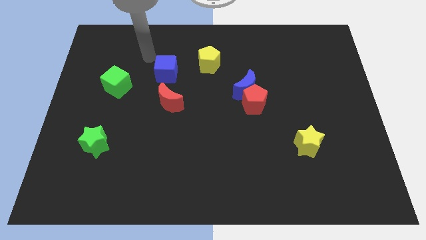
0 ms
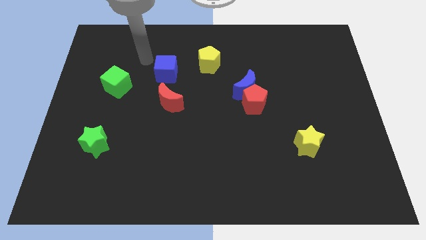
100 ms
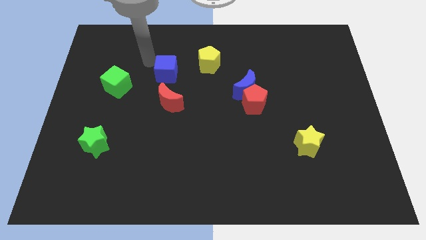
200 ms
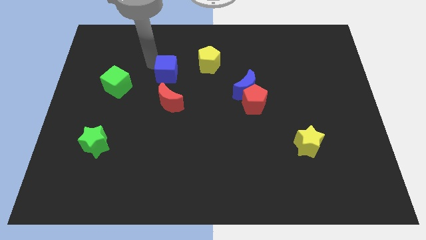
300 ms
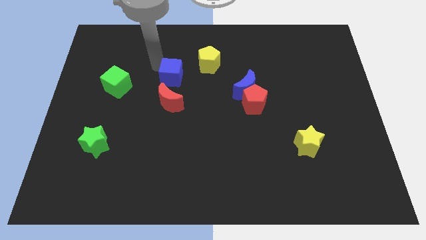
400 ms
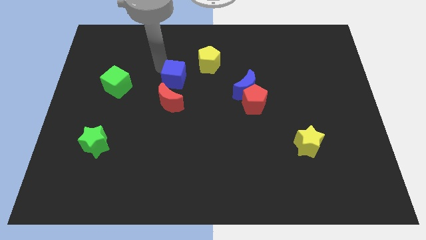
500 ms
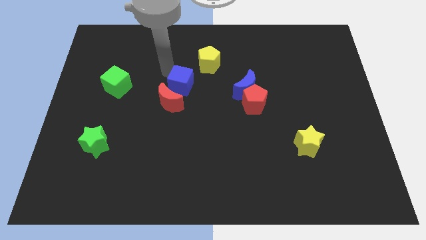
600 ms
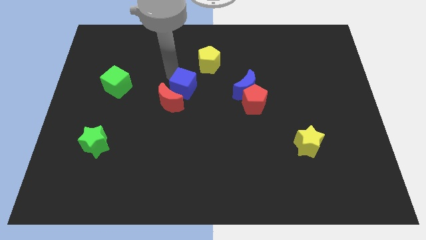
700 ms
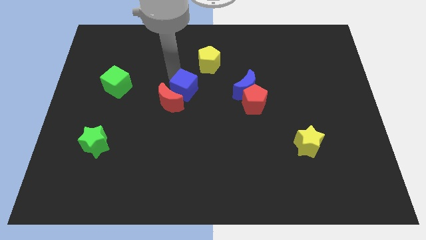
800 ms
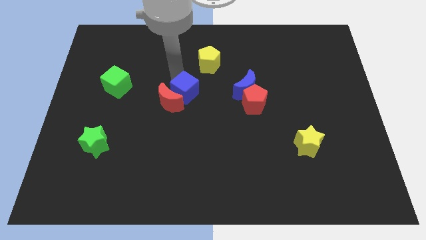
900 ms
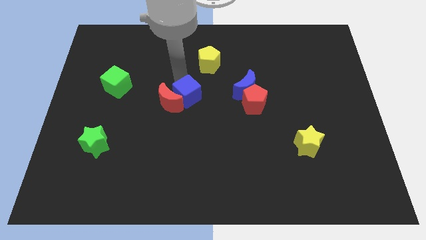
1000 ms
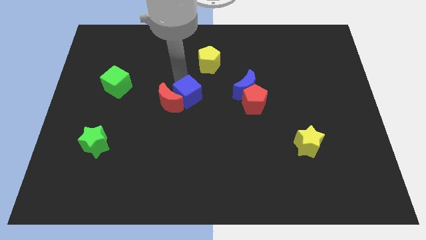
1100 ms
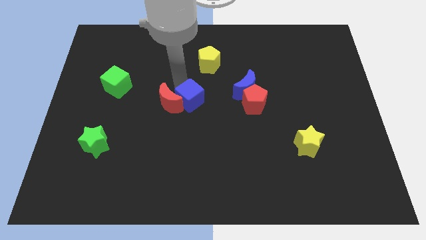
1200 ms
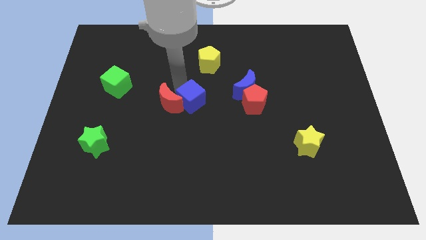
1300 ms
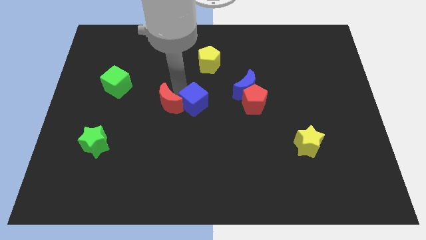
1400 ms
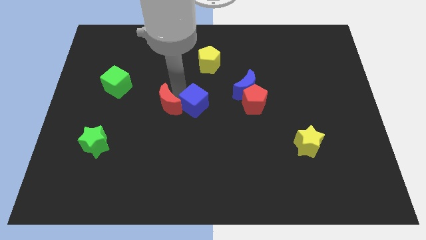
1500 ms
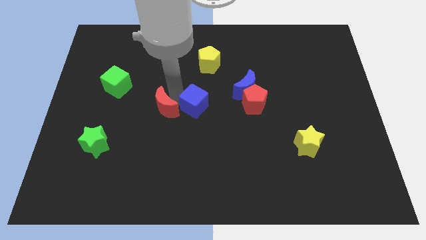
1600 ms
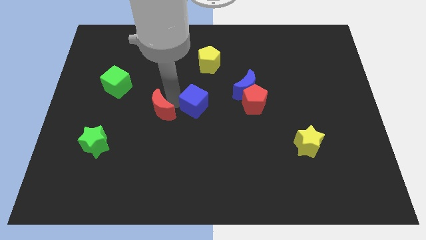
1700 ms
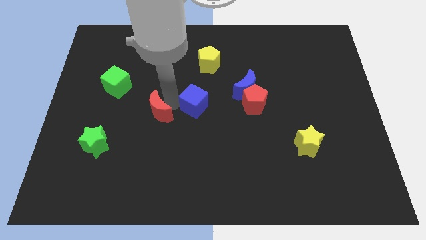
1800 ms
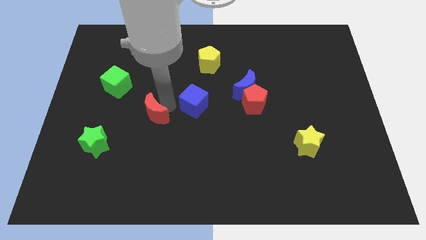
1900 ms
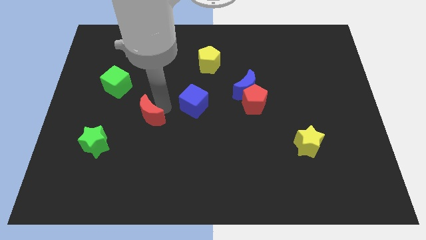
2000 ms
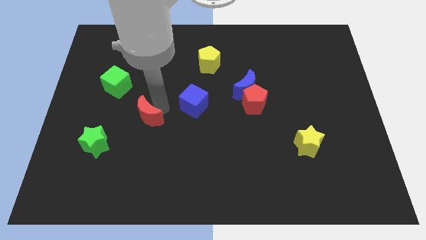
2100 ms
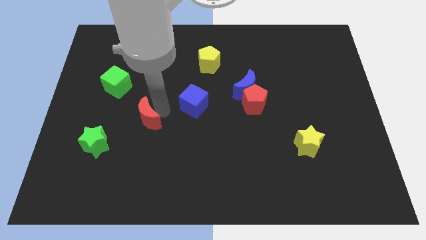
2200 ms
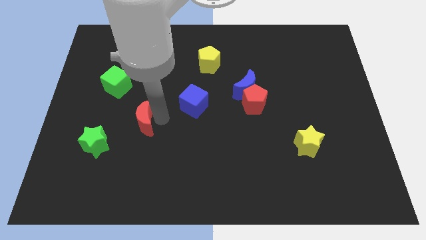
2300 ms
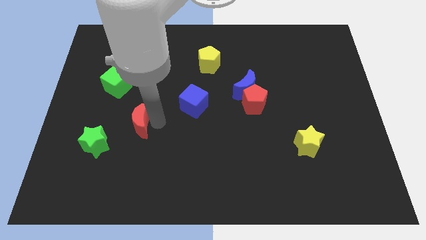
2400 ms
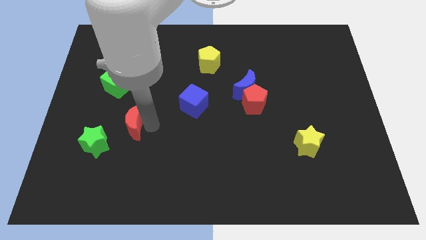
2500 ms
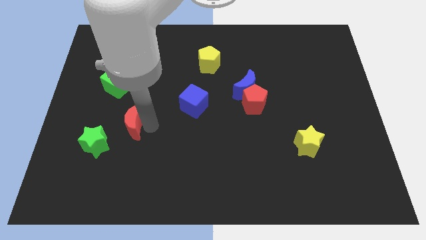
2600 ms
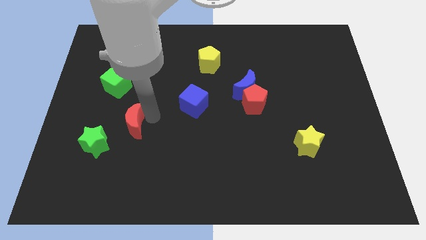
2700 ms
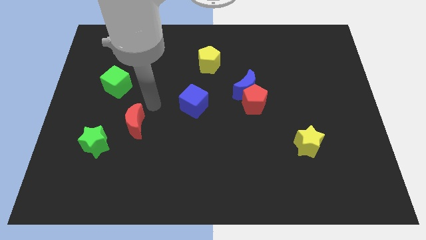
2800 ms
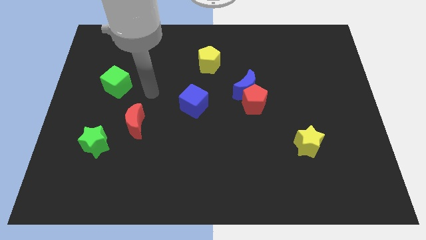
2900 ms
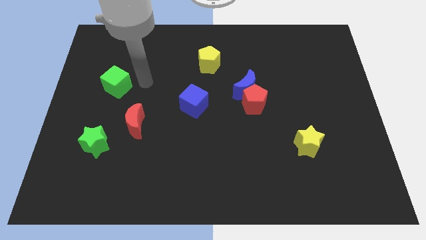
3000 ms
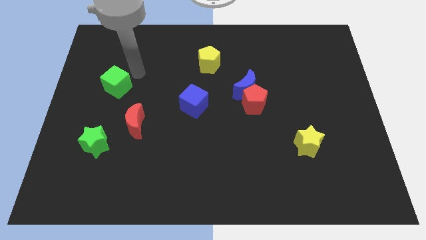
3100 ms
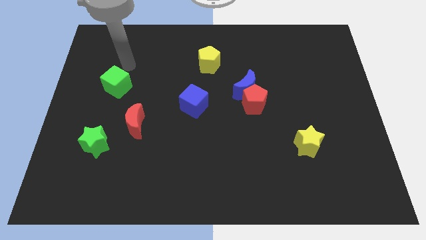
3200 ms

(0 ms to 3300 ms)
separate the blue cube and the red crescent

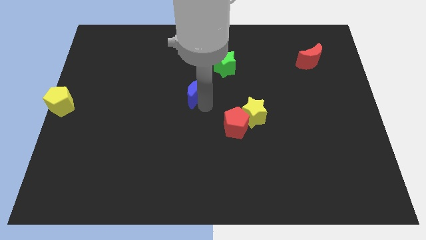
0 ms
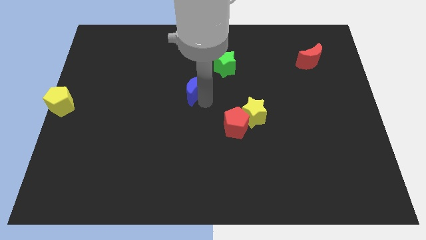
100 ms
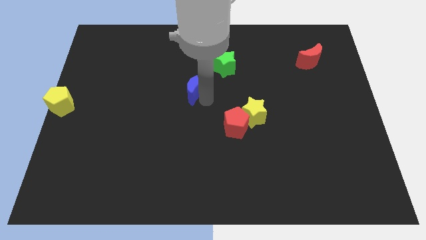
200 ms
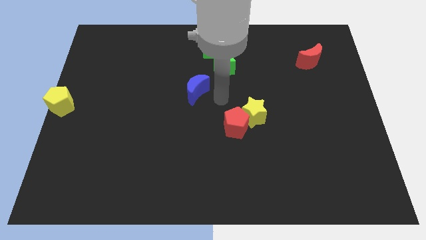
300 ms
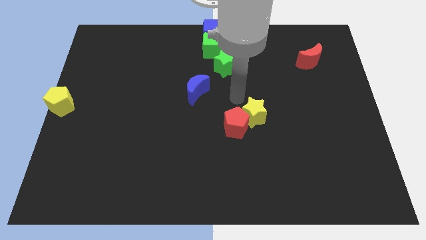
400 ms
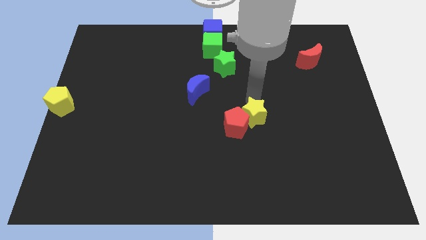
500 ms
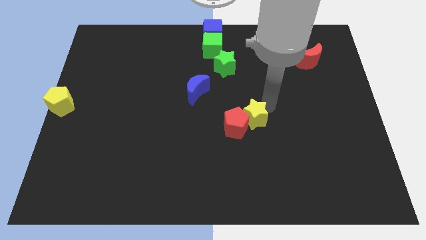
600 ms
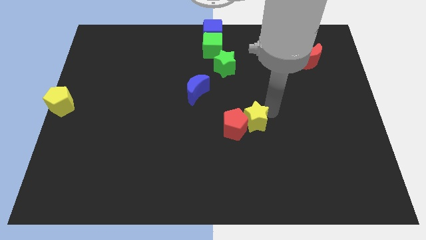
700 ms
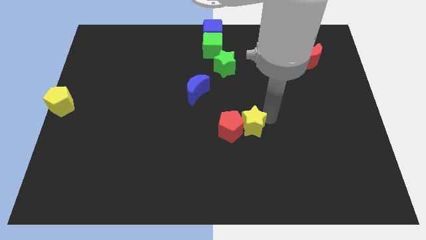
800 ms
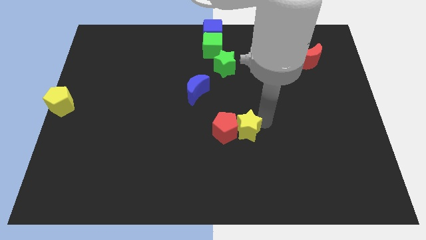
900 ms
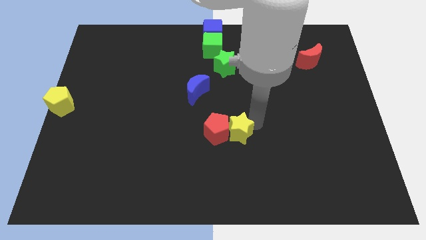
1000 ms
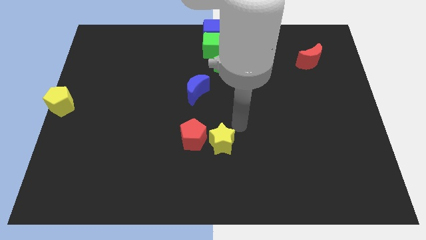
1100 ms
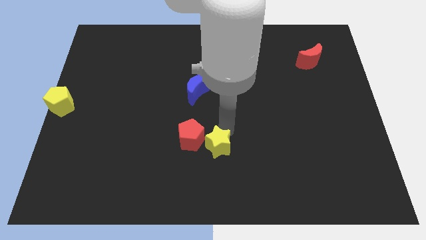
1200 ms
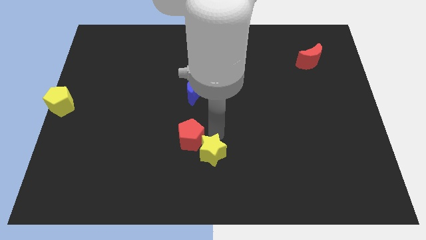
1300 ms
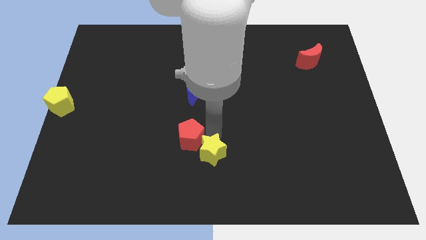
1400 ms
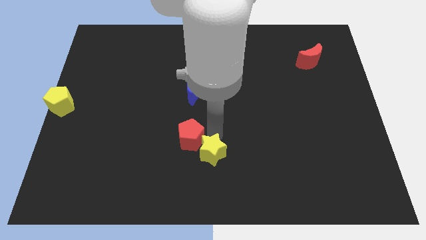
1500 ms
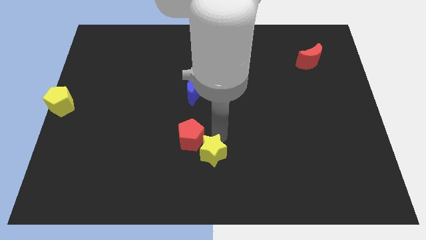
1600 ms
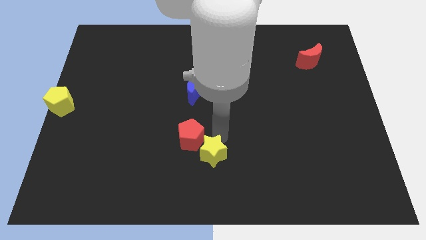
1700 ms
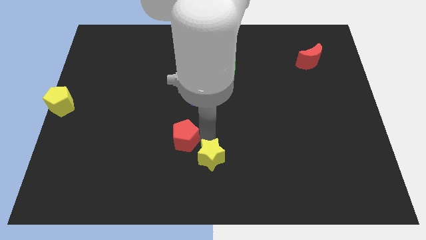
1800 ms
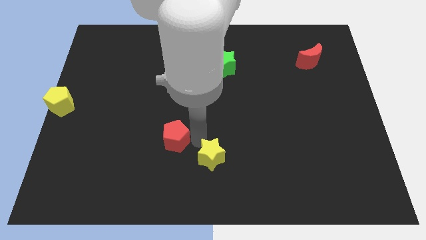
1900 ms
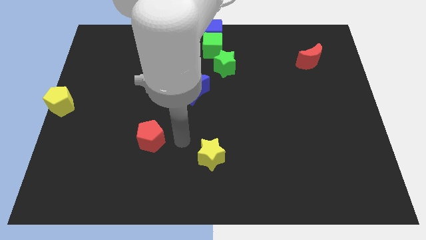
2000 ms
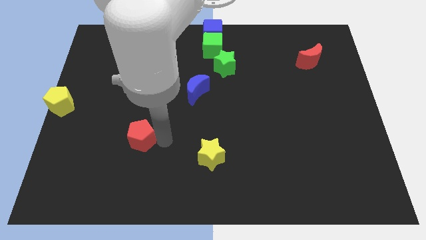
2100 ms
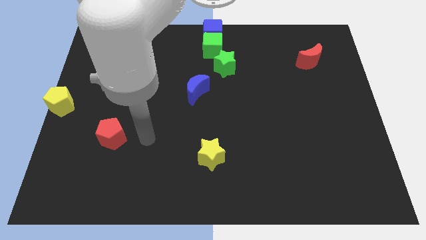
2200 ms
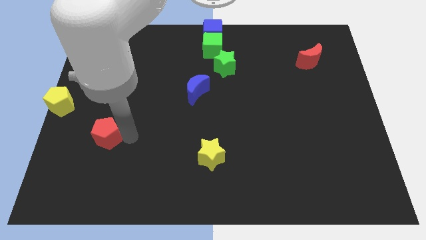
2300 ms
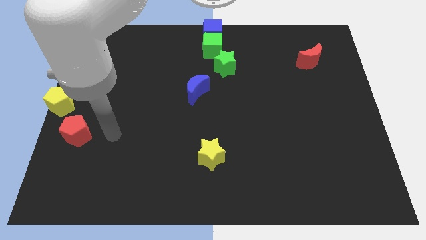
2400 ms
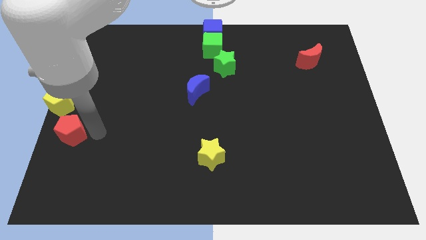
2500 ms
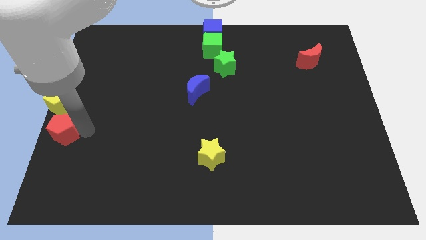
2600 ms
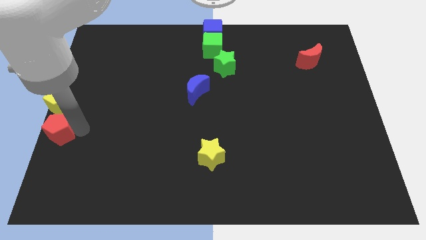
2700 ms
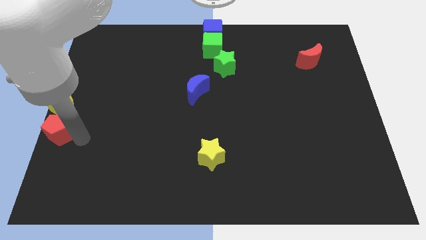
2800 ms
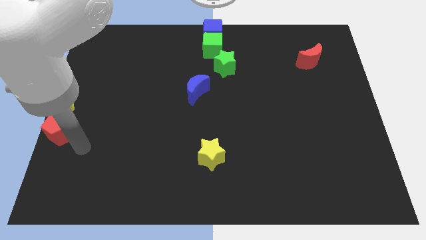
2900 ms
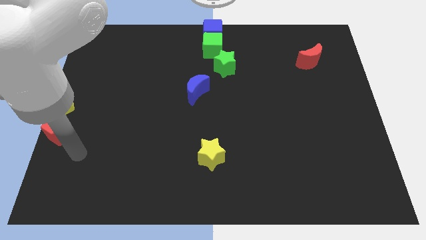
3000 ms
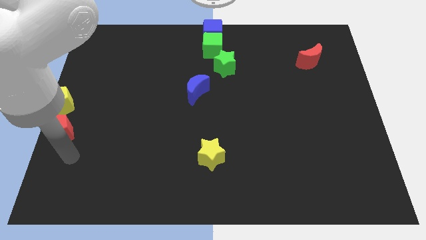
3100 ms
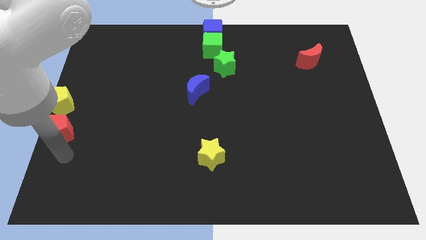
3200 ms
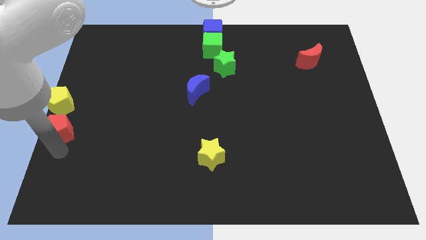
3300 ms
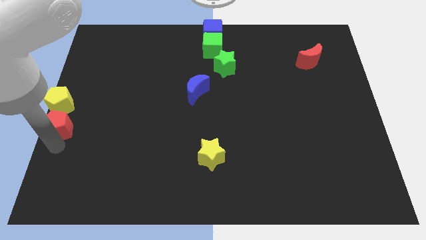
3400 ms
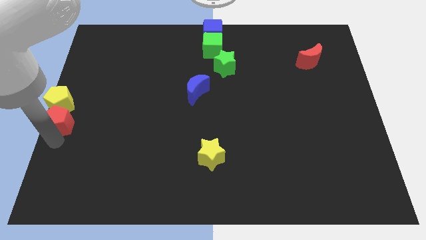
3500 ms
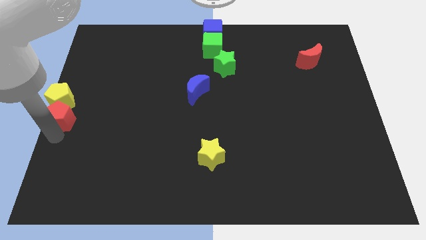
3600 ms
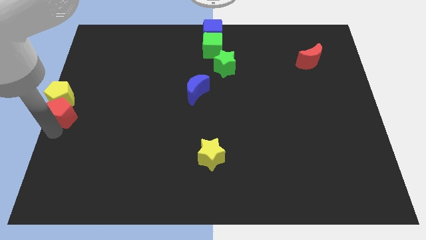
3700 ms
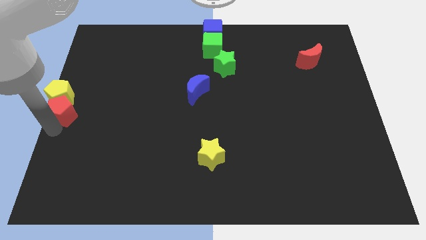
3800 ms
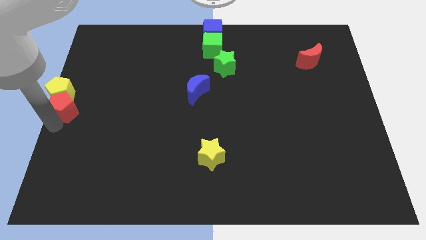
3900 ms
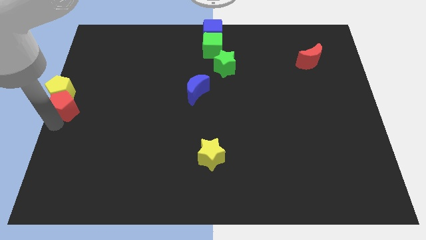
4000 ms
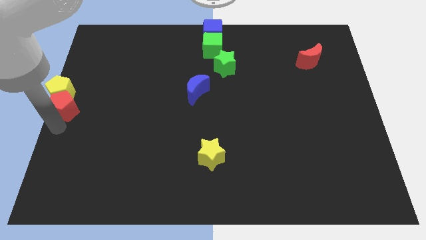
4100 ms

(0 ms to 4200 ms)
push red pentagon to left center of the board

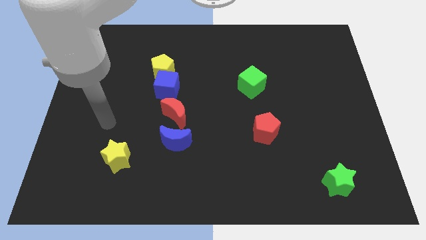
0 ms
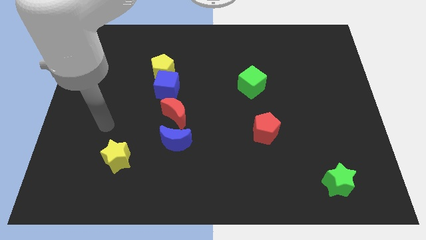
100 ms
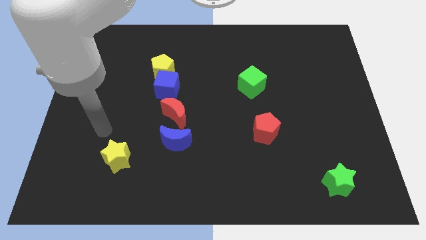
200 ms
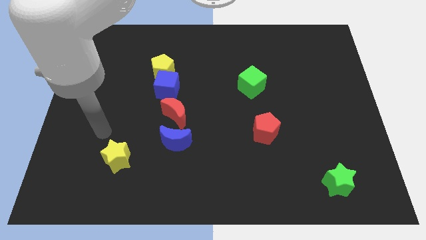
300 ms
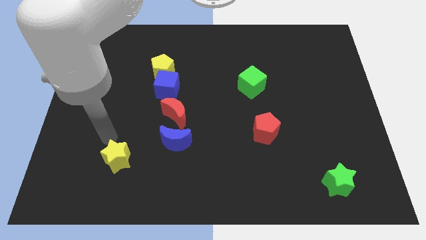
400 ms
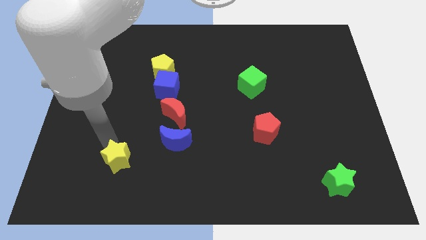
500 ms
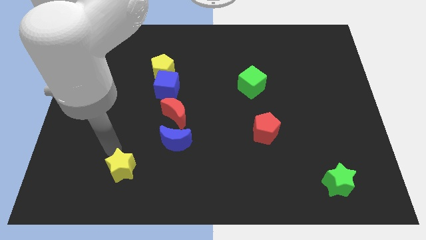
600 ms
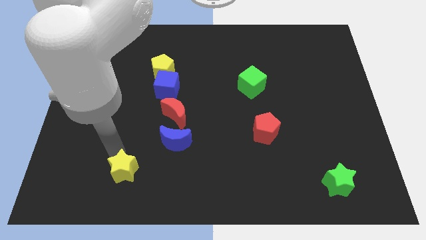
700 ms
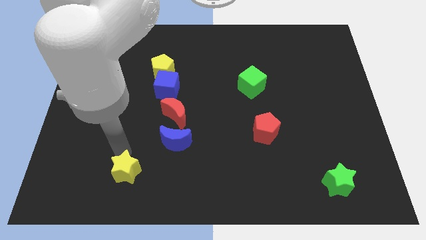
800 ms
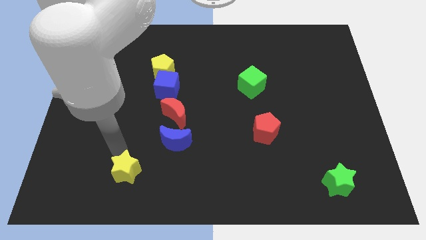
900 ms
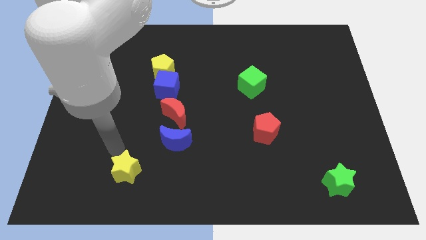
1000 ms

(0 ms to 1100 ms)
push the yellow star slightly towards the bottom

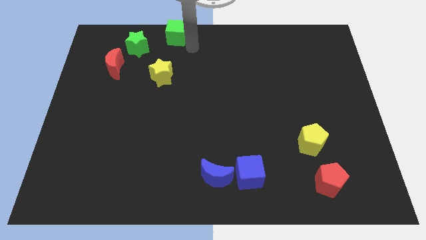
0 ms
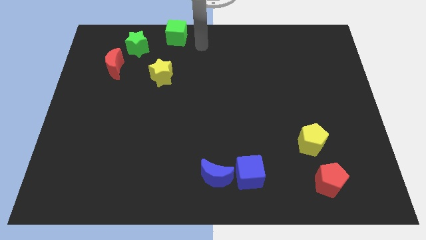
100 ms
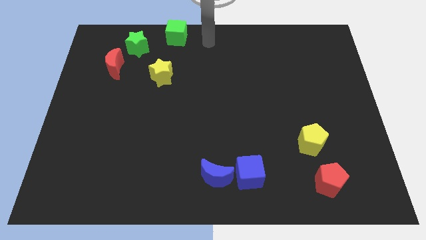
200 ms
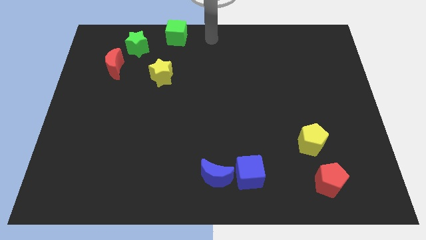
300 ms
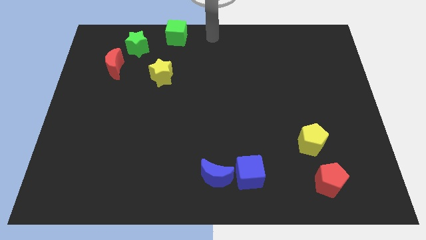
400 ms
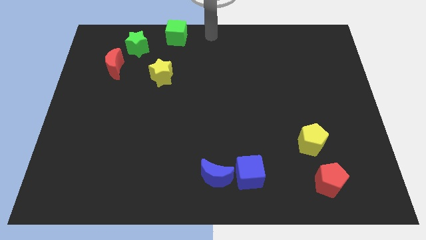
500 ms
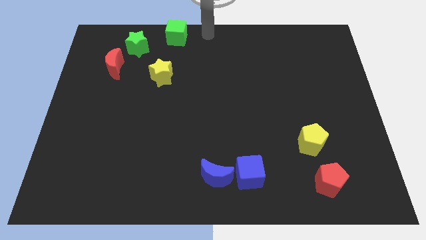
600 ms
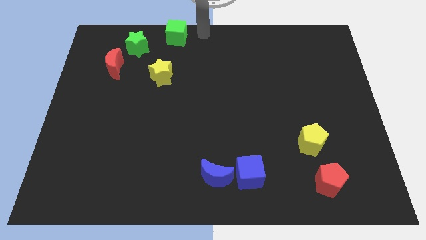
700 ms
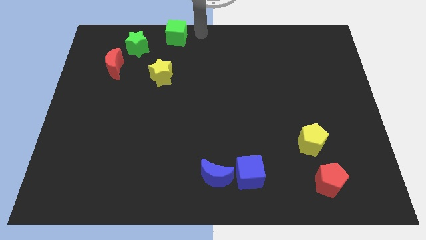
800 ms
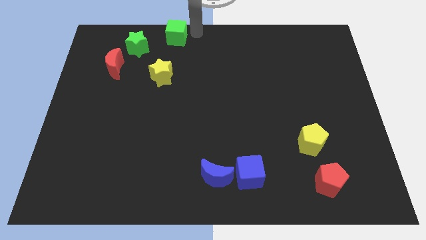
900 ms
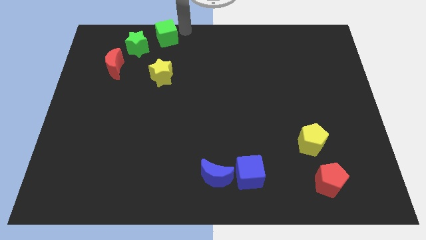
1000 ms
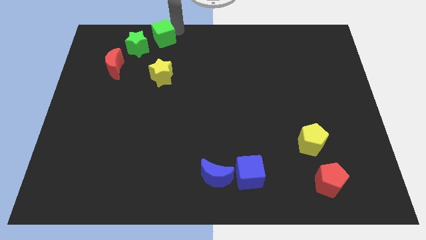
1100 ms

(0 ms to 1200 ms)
move the green cube right beside the green cube
